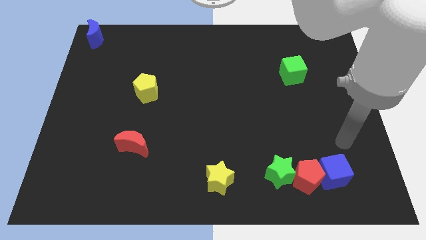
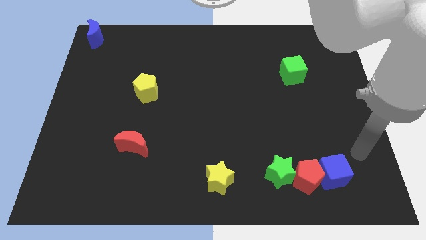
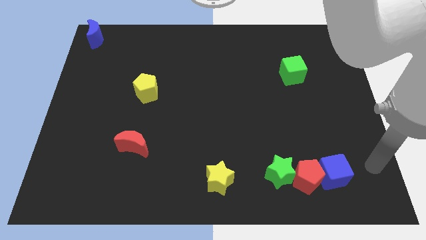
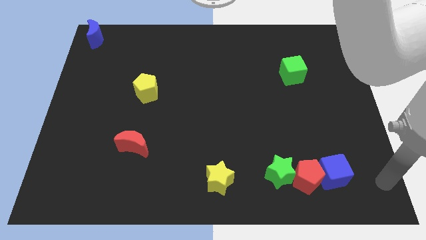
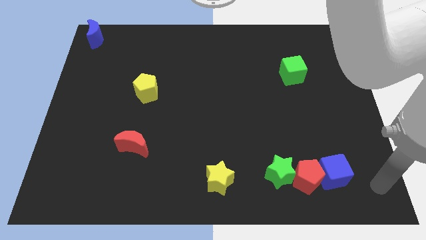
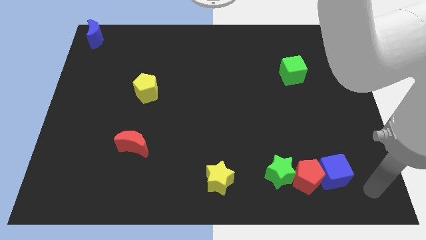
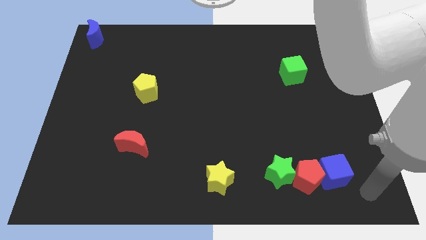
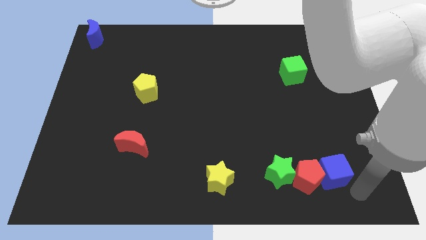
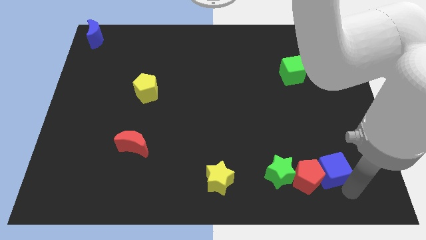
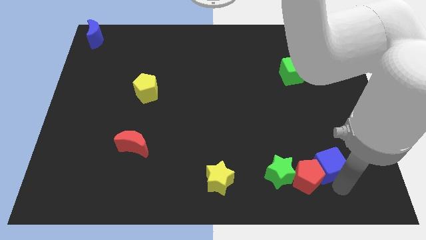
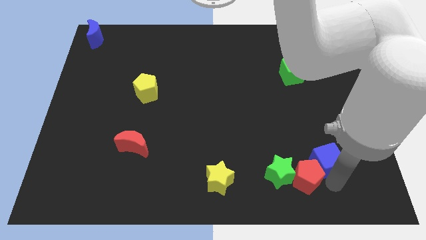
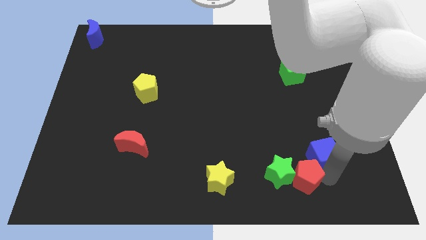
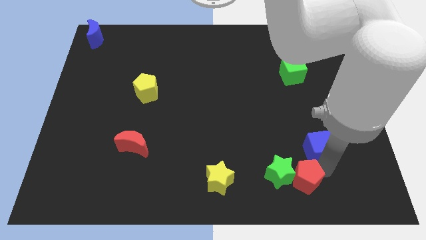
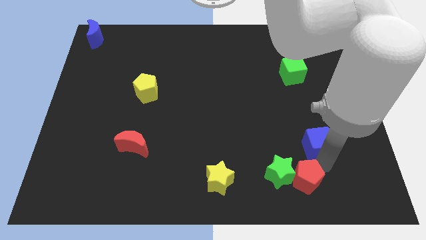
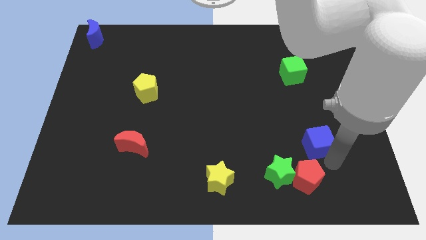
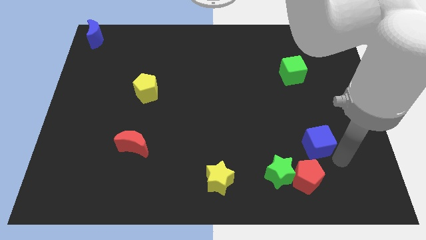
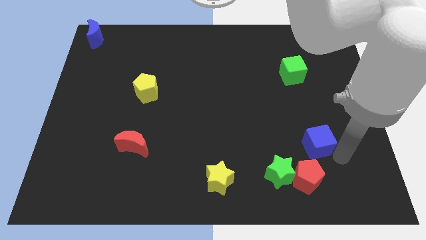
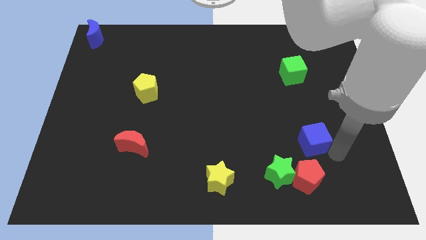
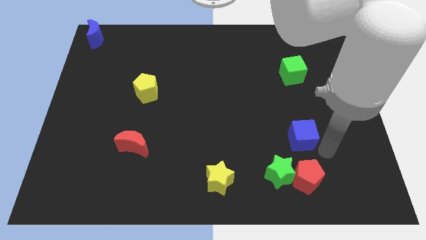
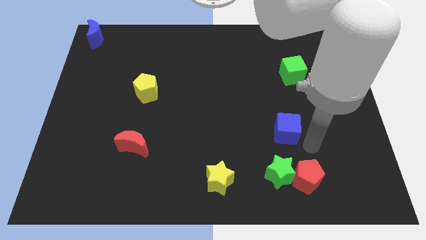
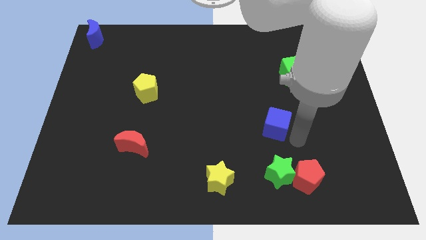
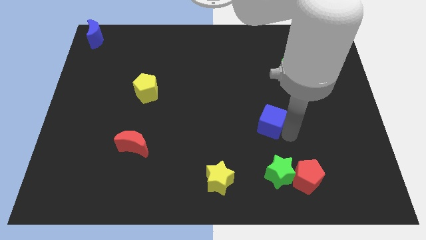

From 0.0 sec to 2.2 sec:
separate the blue cube on top of green star

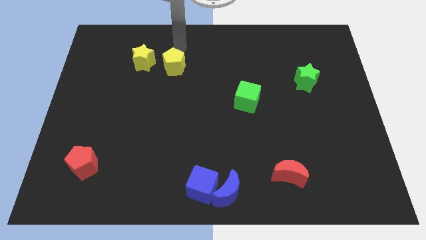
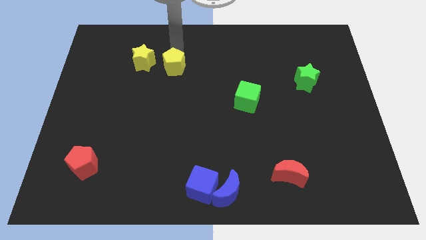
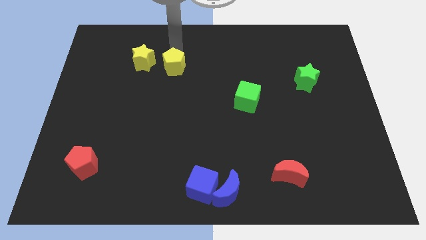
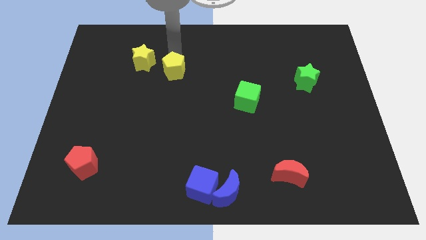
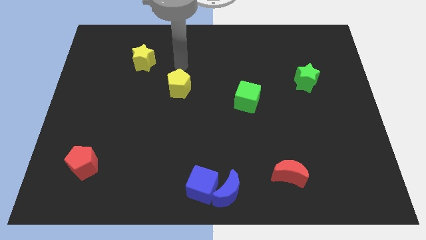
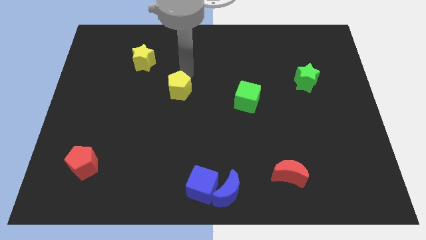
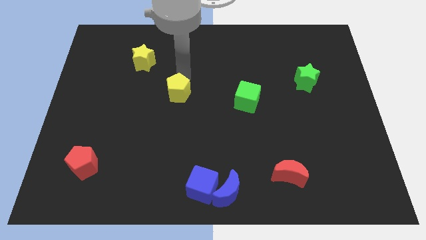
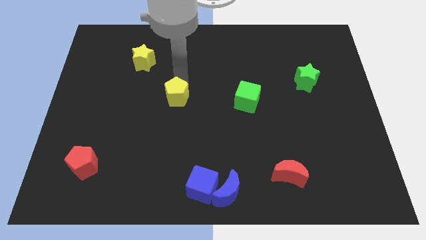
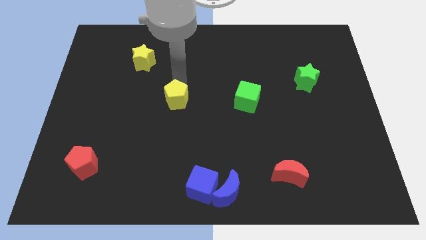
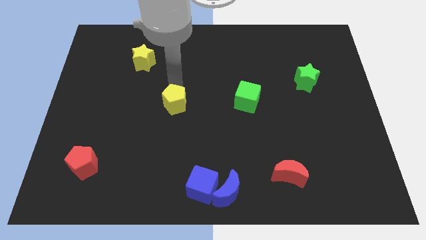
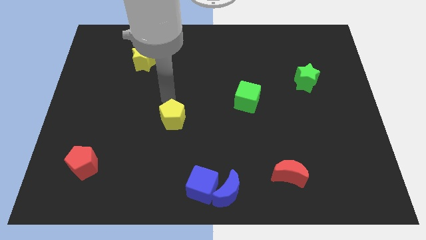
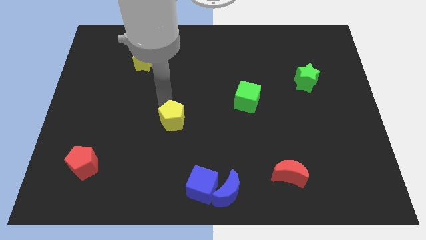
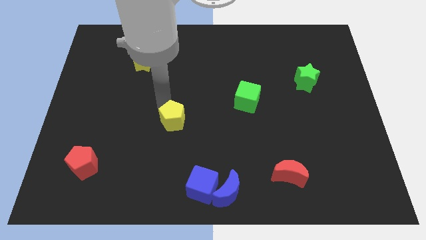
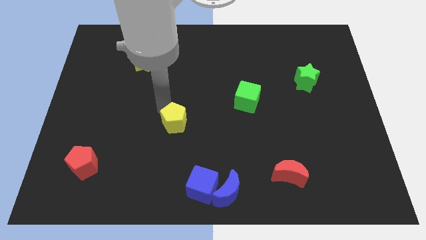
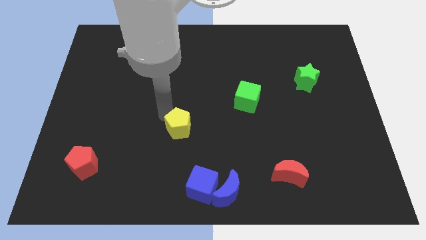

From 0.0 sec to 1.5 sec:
place the yellow pentagon diagonally to the blue cube

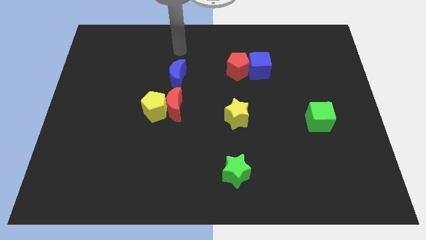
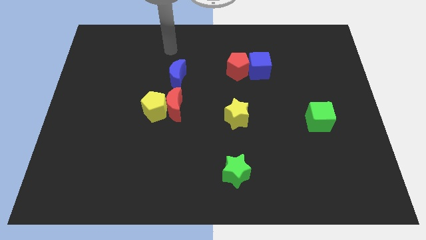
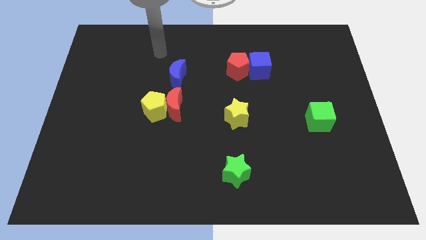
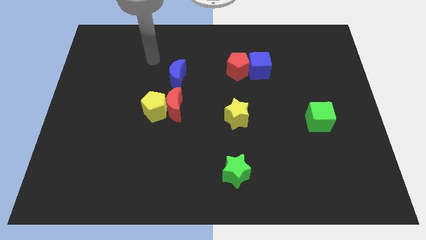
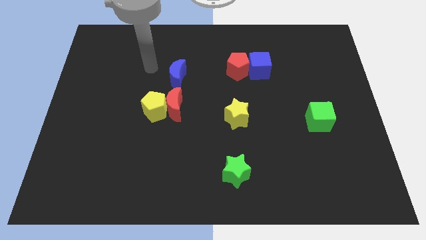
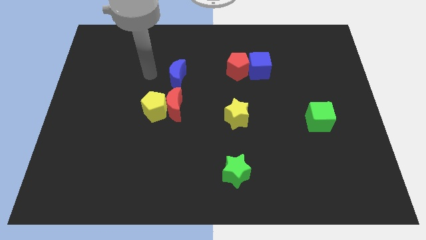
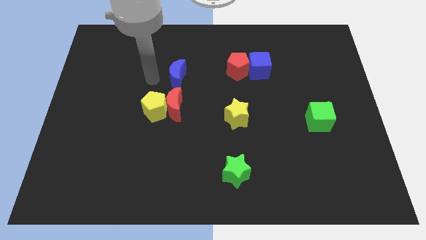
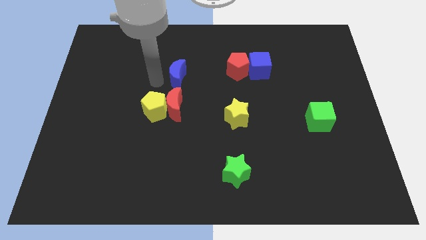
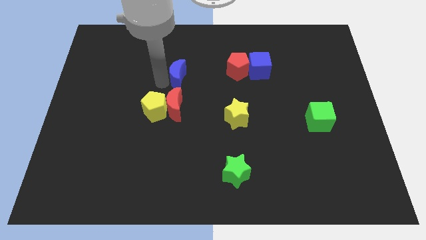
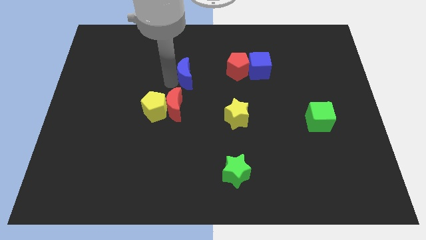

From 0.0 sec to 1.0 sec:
touch the bottom of blue moon

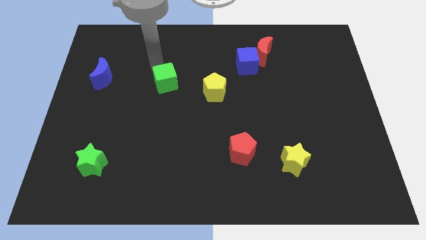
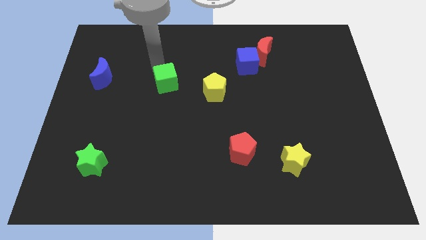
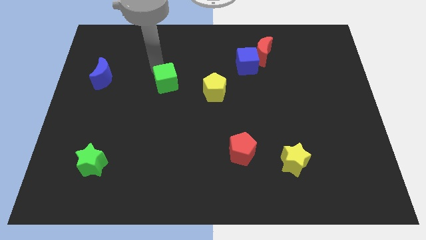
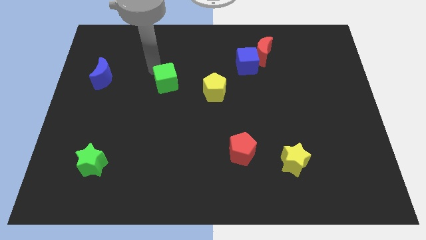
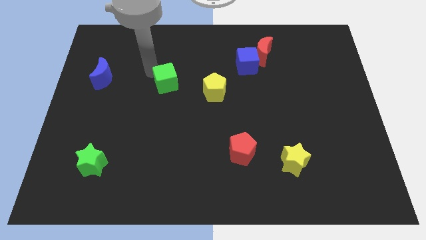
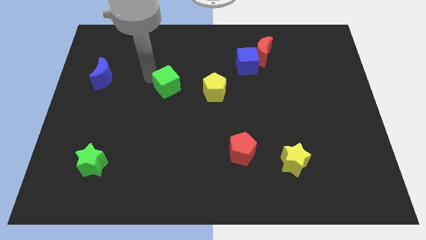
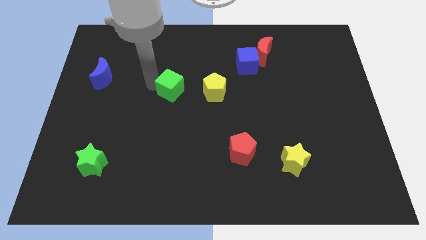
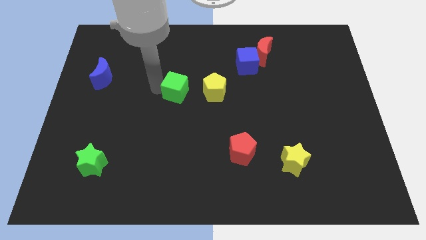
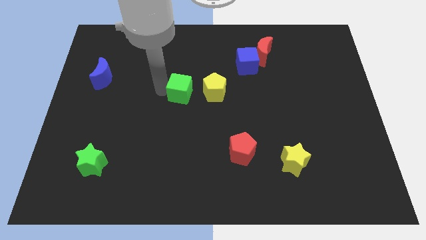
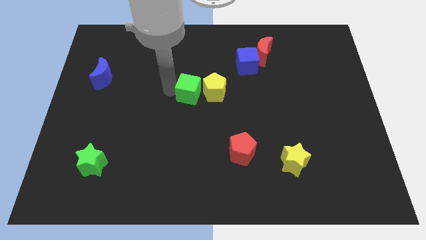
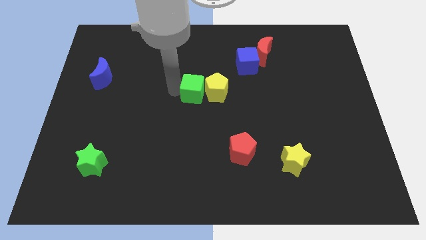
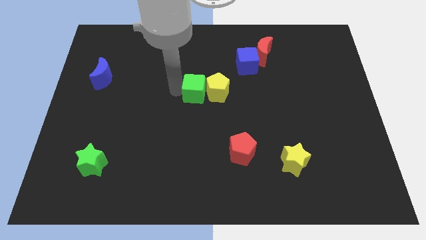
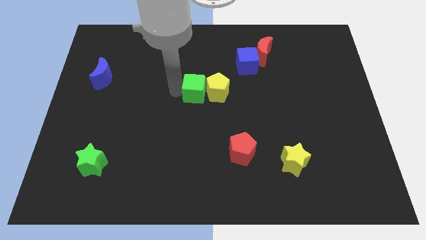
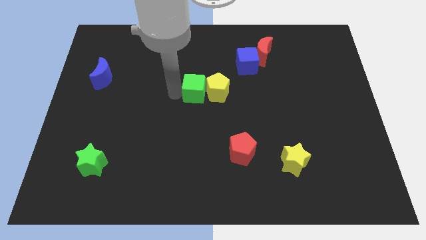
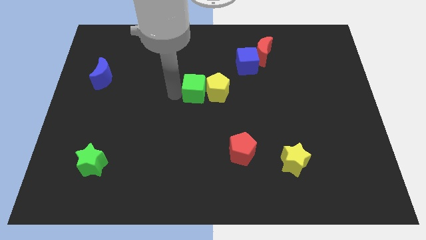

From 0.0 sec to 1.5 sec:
move the green cube to the left side of the yellow

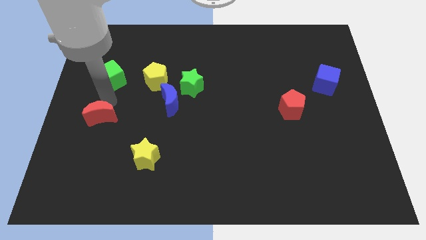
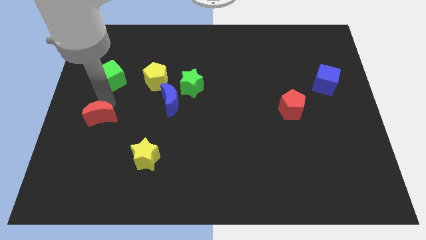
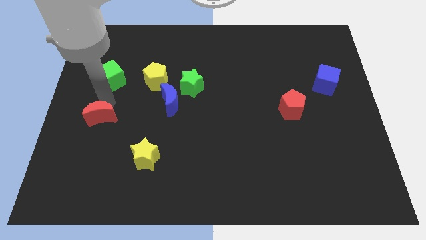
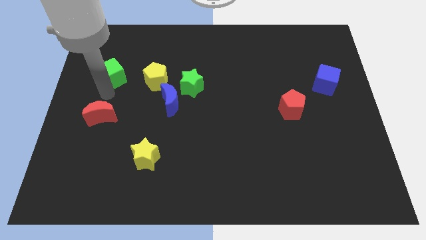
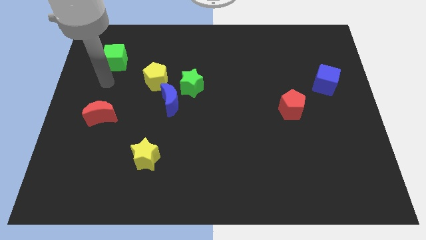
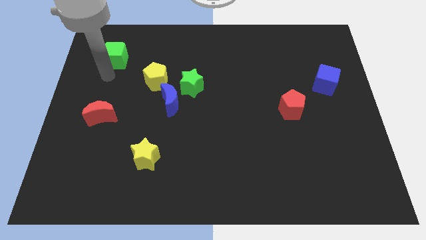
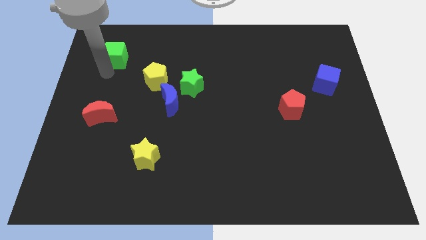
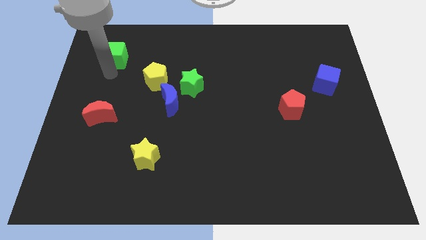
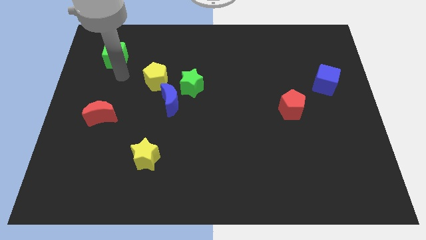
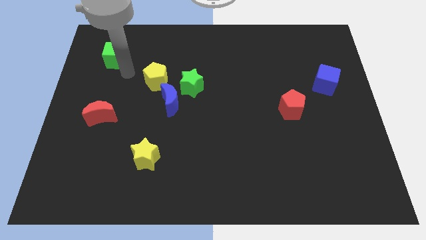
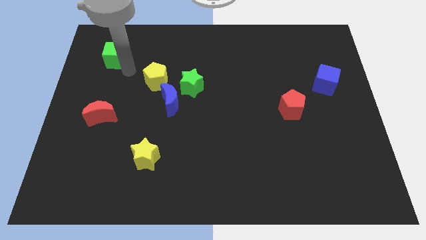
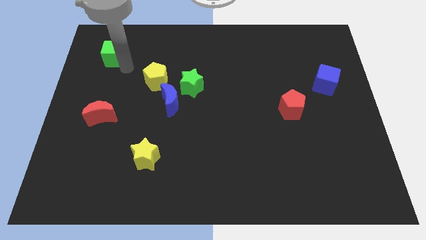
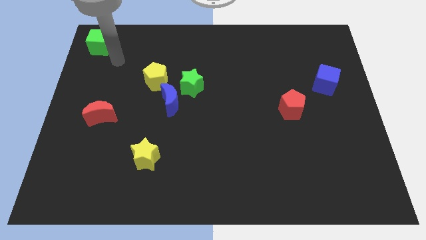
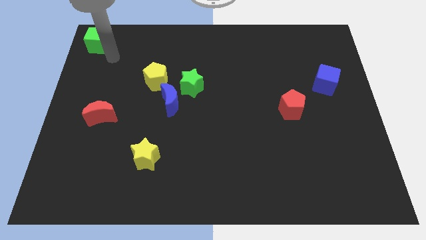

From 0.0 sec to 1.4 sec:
move the green cube to the top left

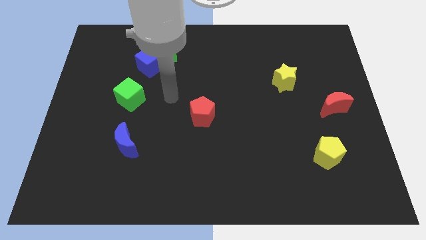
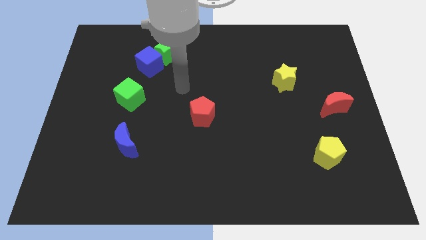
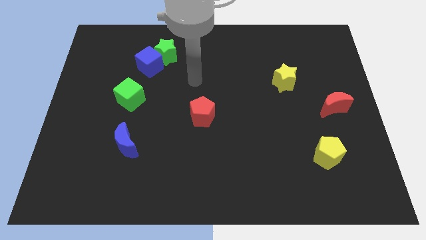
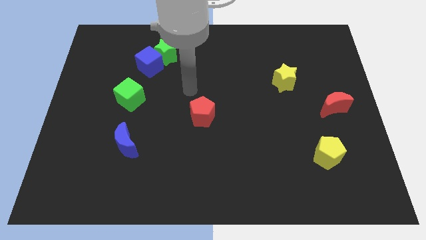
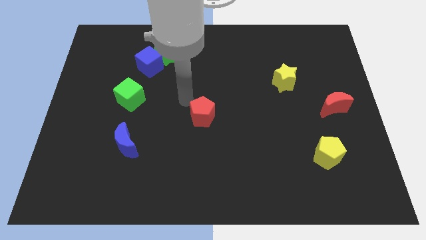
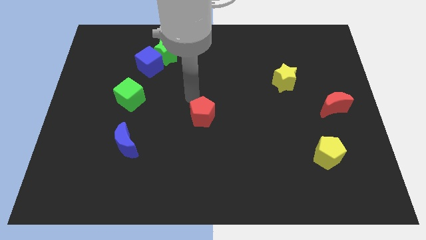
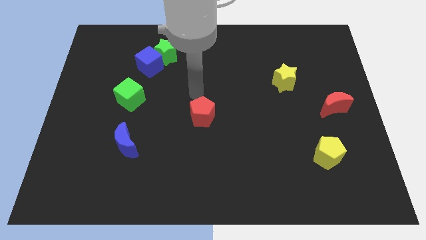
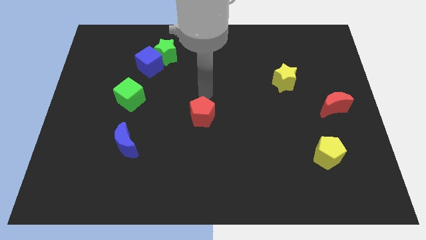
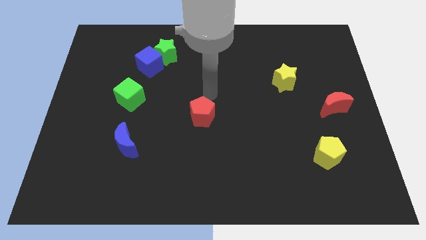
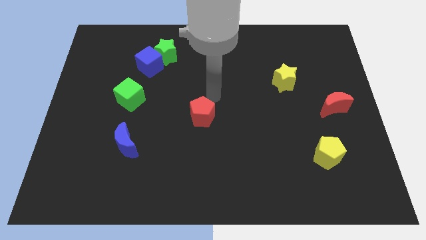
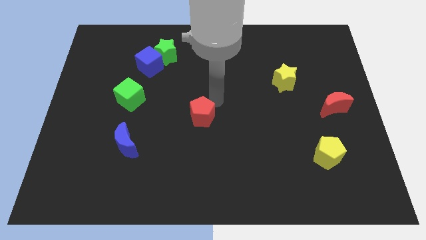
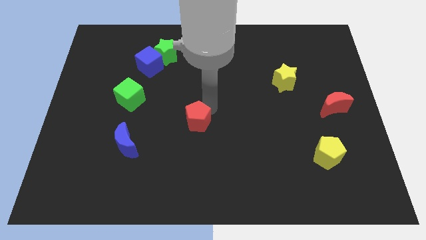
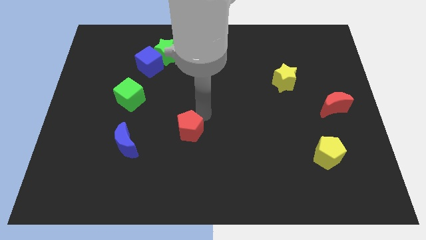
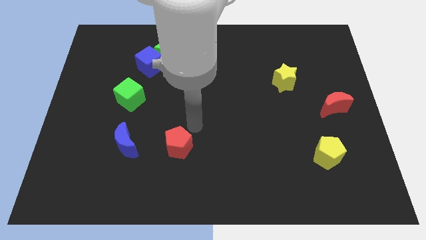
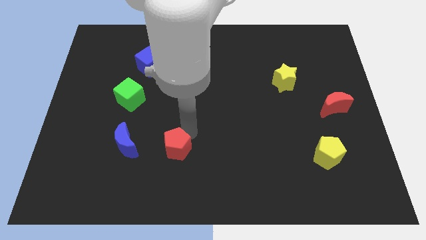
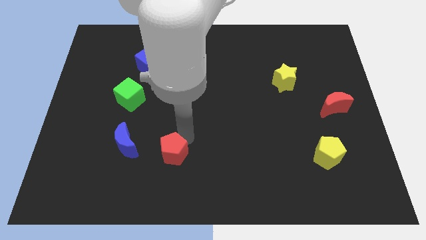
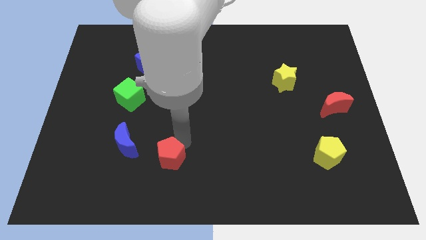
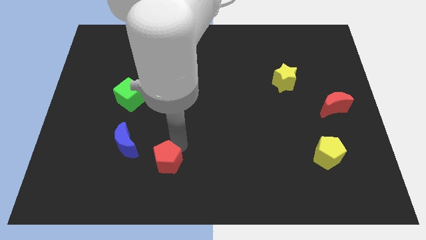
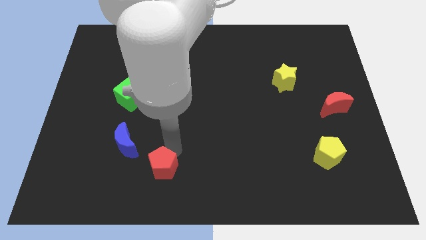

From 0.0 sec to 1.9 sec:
move the red pentagon towards the bottom side
